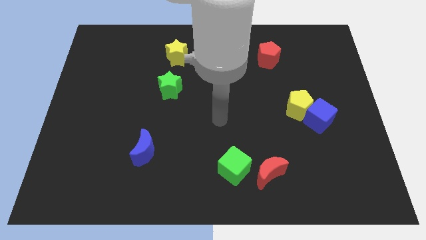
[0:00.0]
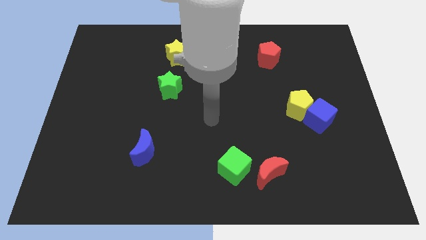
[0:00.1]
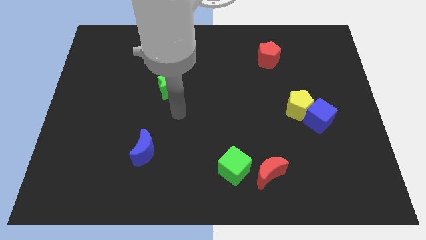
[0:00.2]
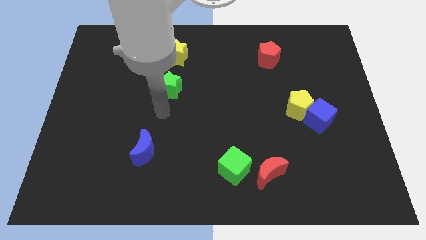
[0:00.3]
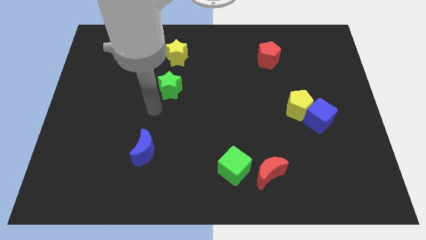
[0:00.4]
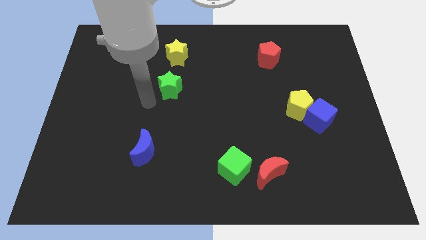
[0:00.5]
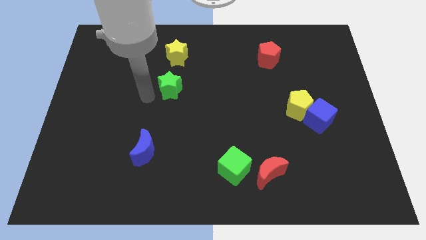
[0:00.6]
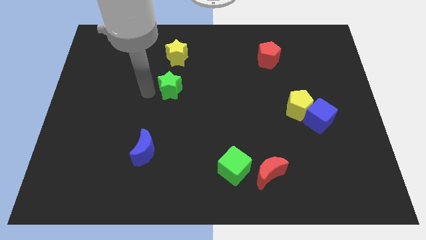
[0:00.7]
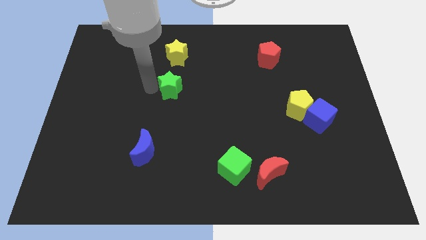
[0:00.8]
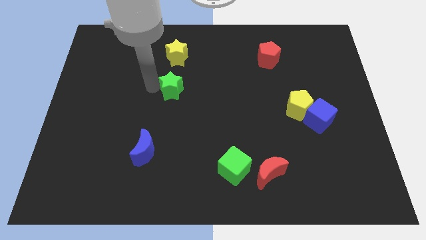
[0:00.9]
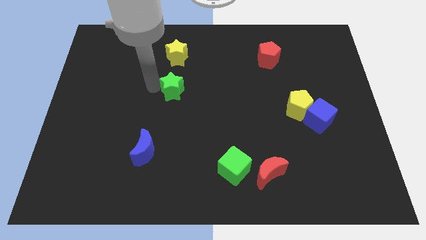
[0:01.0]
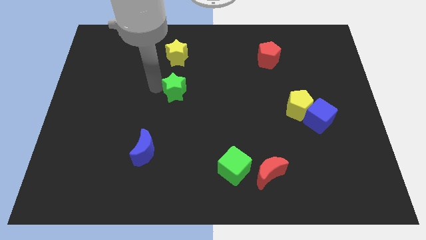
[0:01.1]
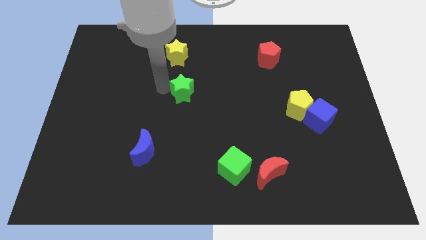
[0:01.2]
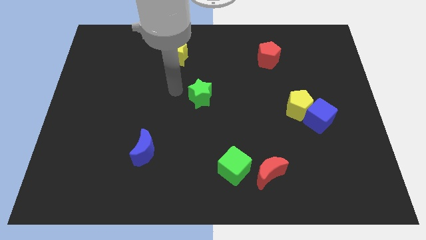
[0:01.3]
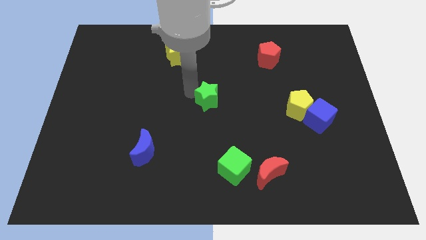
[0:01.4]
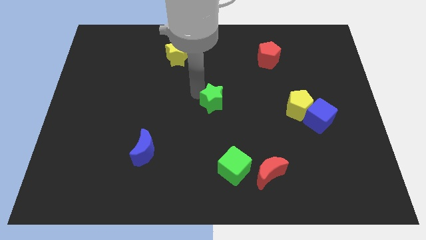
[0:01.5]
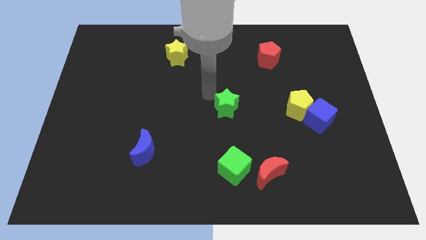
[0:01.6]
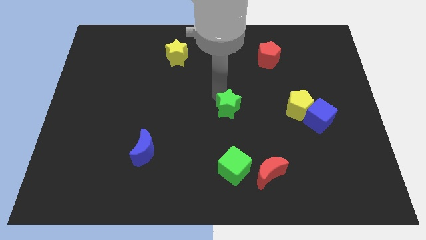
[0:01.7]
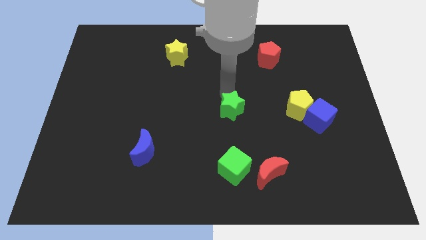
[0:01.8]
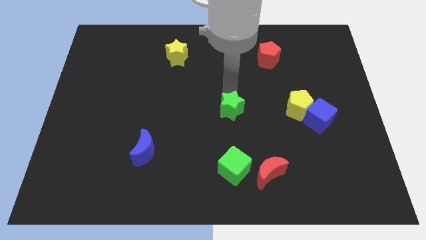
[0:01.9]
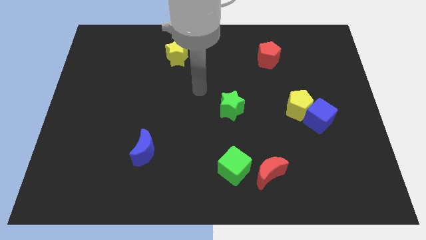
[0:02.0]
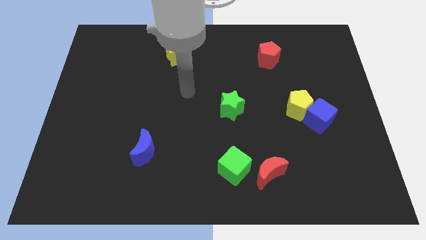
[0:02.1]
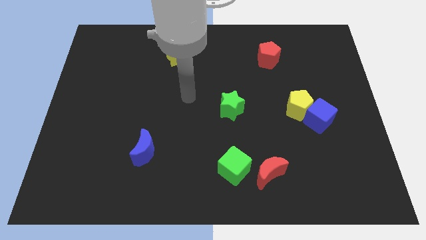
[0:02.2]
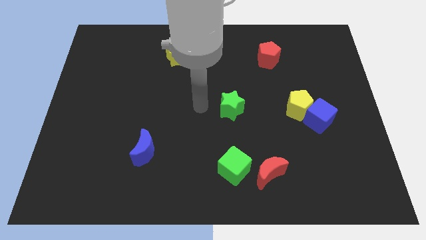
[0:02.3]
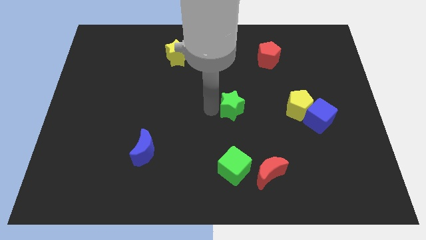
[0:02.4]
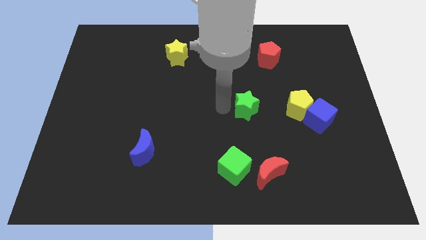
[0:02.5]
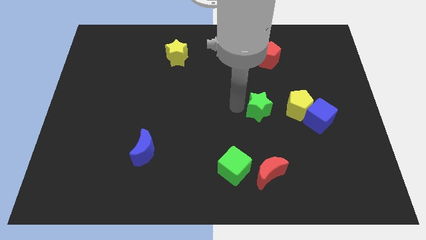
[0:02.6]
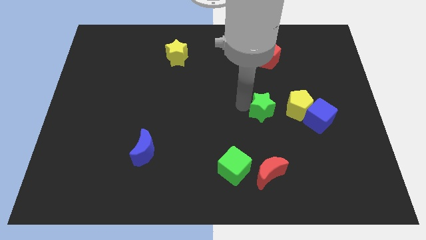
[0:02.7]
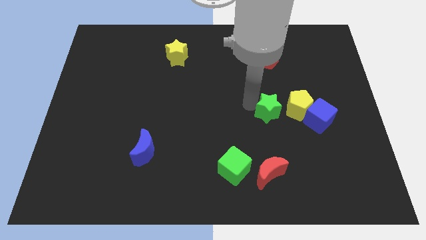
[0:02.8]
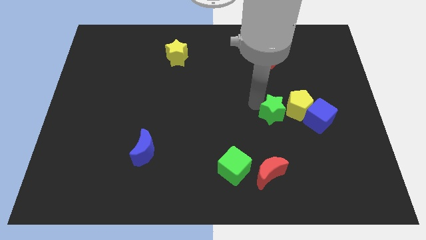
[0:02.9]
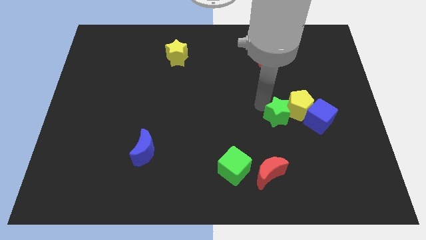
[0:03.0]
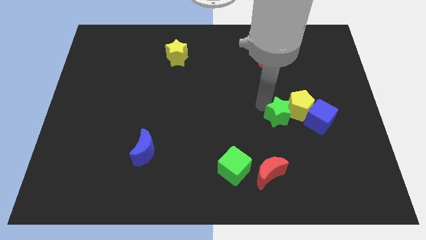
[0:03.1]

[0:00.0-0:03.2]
push the green star next to the yellow pentagon

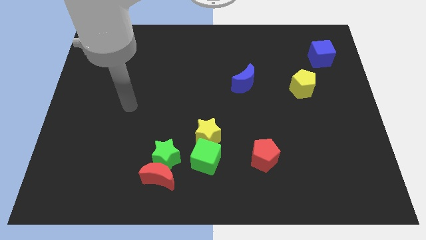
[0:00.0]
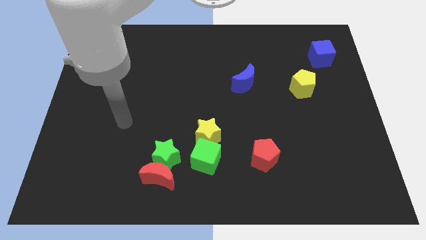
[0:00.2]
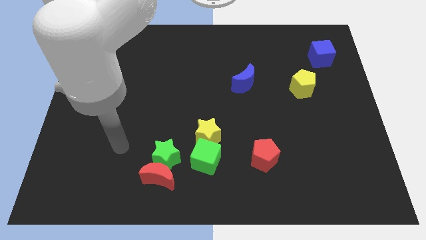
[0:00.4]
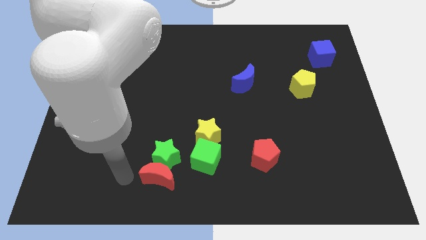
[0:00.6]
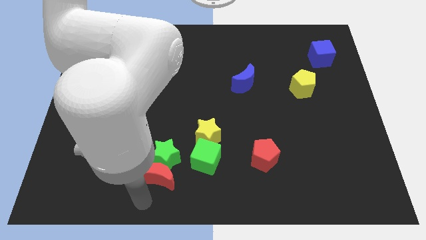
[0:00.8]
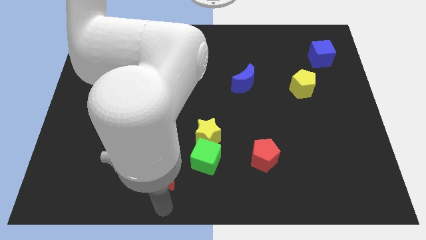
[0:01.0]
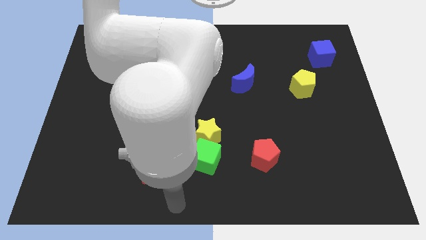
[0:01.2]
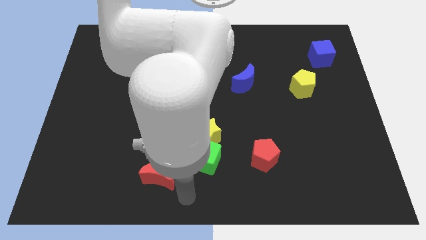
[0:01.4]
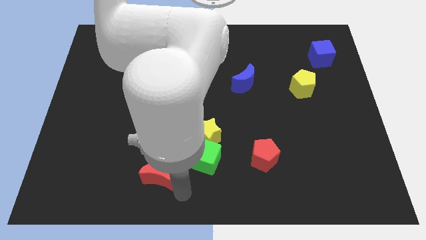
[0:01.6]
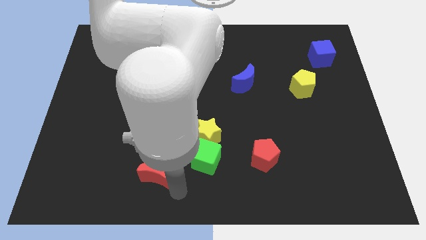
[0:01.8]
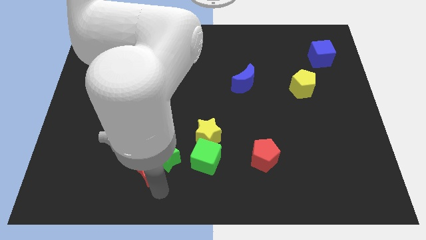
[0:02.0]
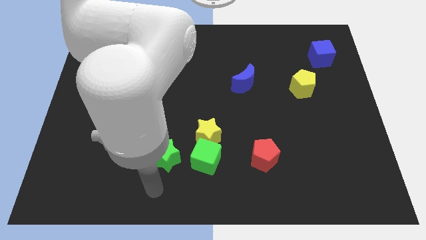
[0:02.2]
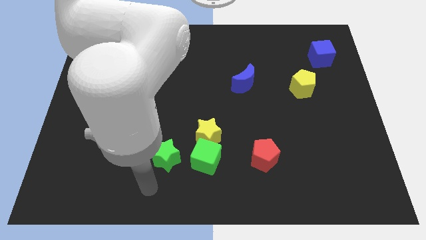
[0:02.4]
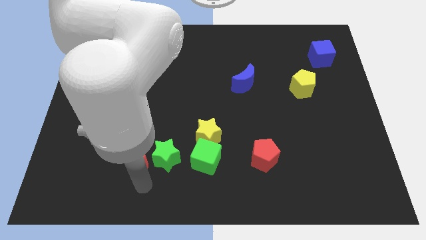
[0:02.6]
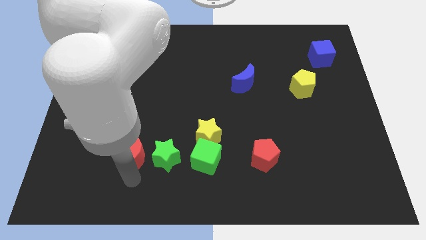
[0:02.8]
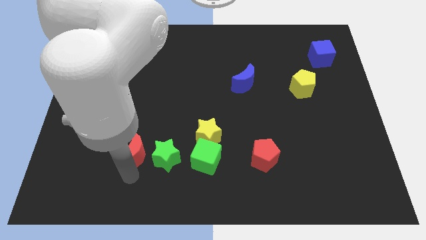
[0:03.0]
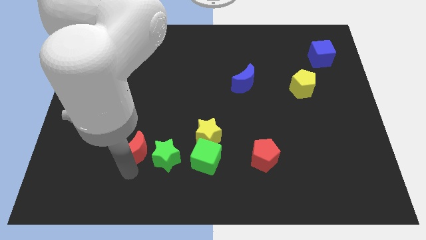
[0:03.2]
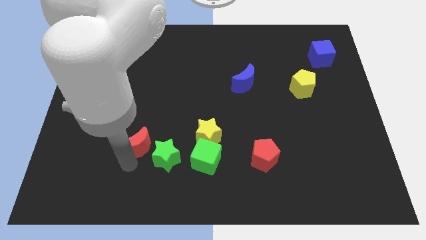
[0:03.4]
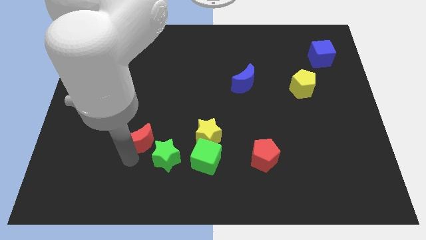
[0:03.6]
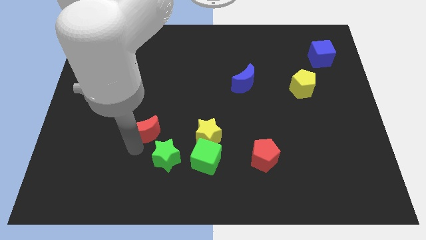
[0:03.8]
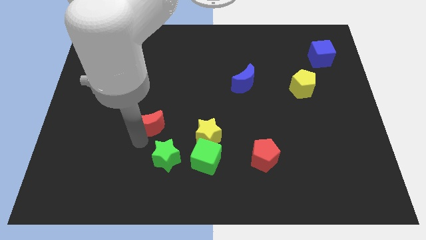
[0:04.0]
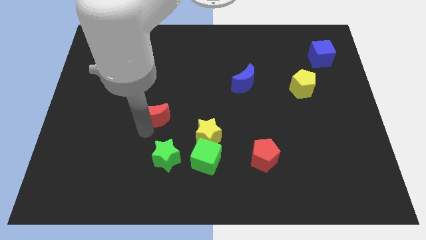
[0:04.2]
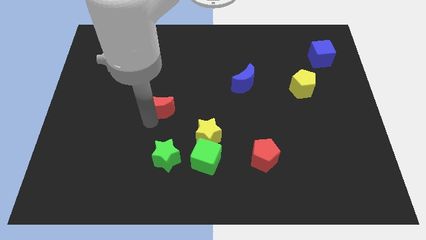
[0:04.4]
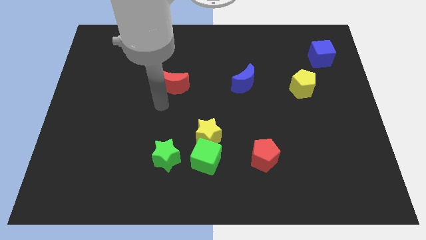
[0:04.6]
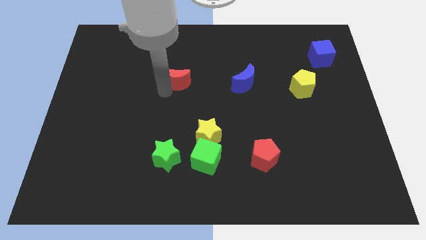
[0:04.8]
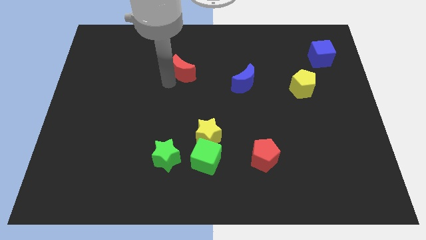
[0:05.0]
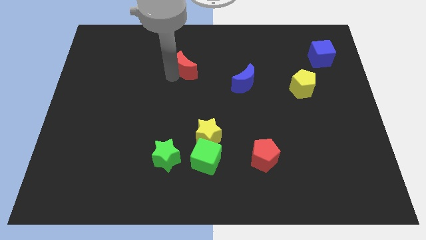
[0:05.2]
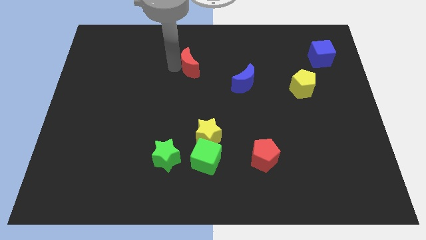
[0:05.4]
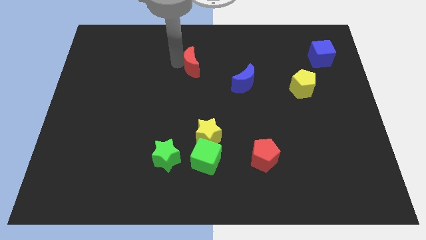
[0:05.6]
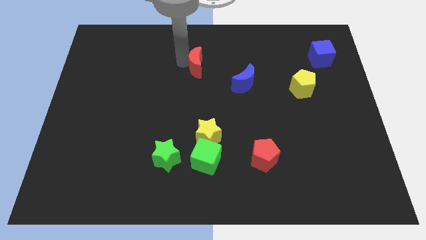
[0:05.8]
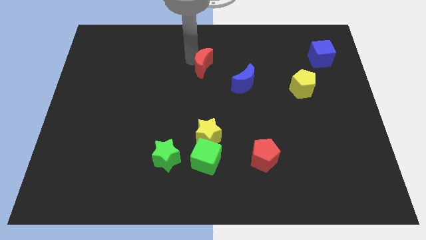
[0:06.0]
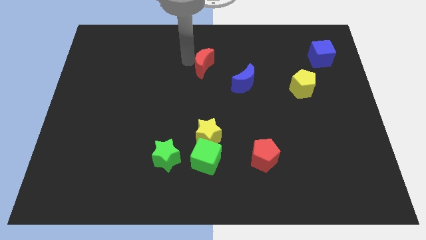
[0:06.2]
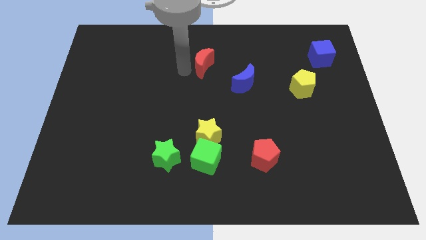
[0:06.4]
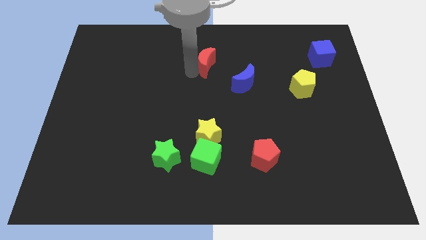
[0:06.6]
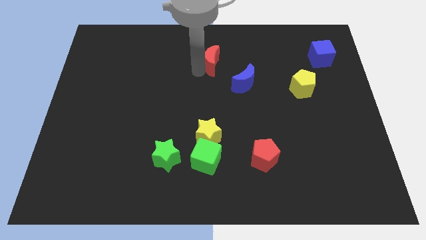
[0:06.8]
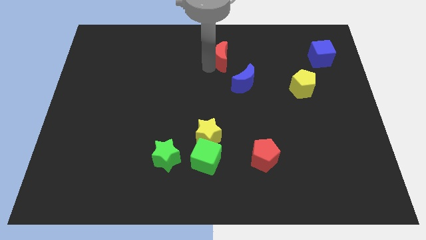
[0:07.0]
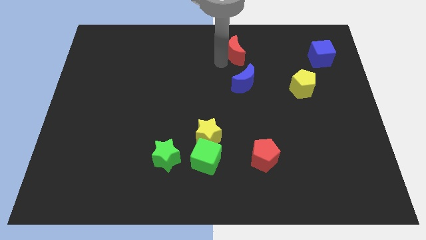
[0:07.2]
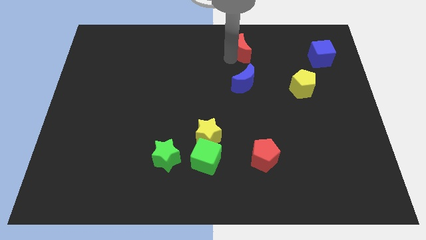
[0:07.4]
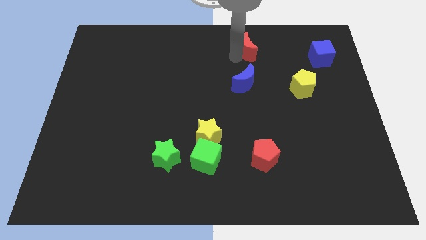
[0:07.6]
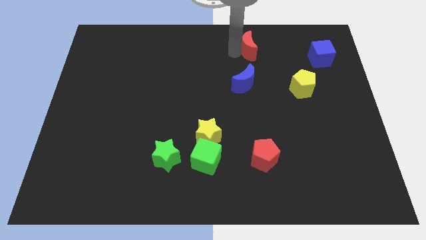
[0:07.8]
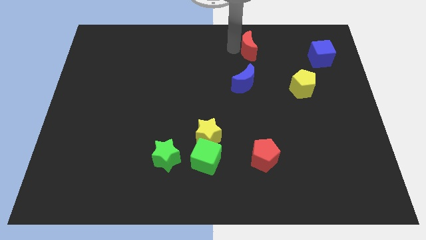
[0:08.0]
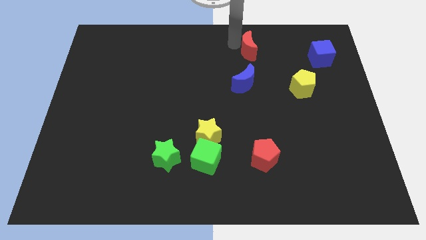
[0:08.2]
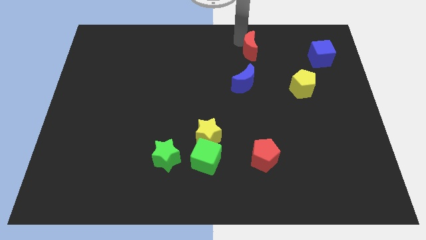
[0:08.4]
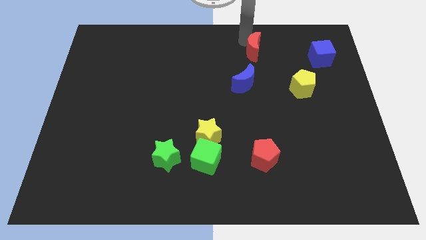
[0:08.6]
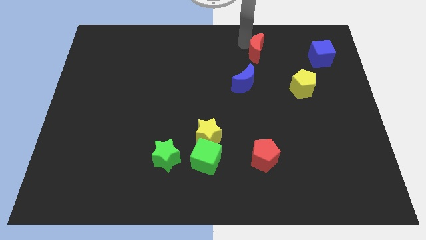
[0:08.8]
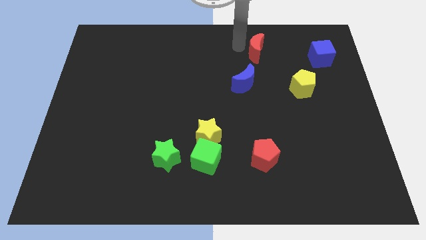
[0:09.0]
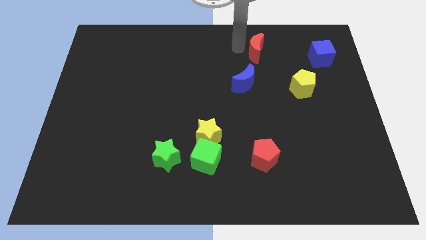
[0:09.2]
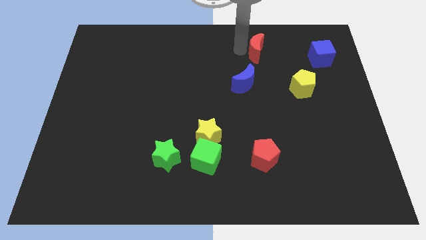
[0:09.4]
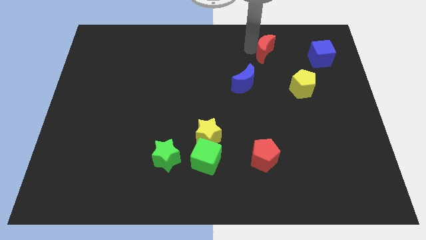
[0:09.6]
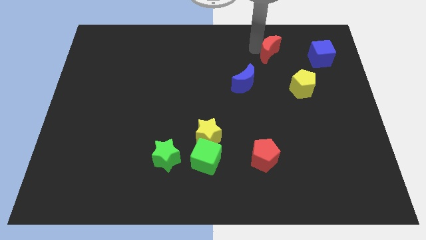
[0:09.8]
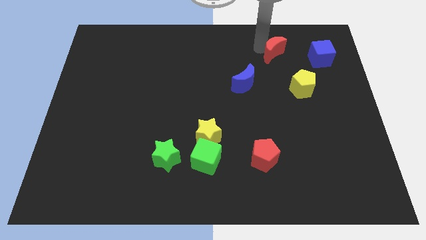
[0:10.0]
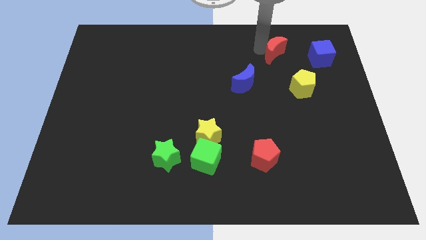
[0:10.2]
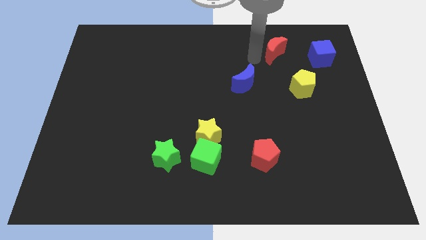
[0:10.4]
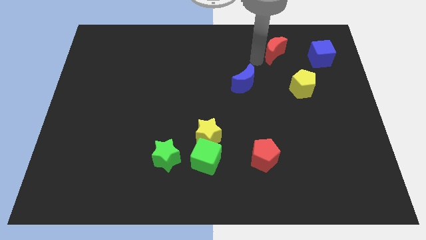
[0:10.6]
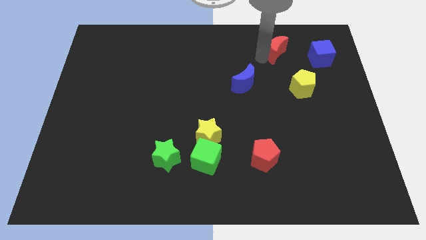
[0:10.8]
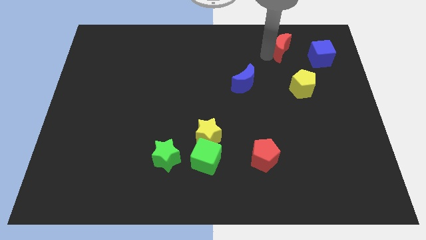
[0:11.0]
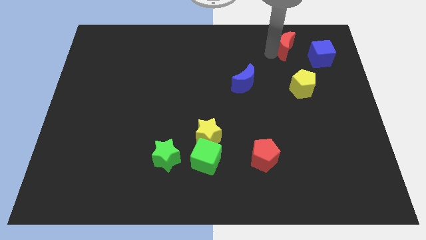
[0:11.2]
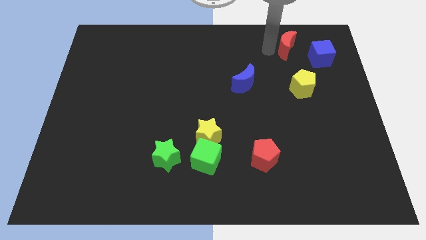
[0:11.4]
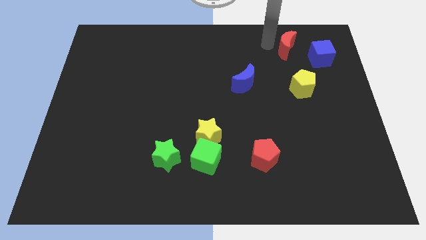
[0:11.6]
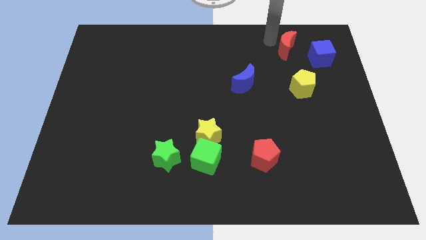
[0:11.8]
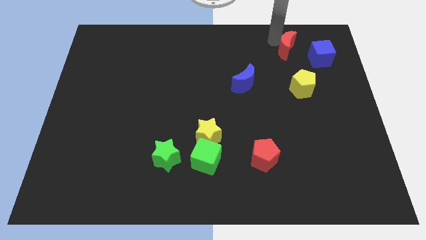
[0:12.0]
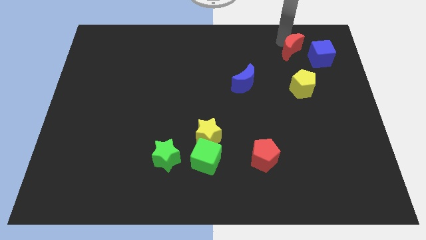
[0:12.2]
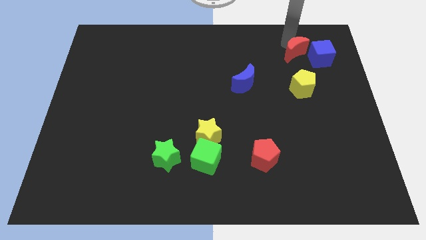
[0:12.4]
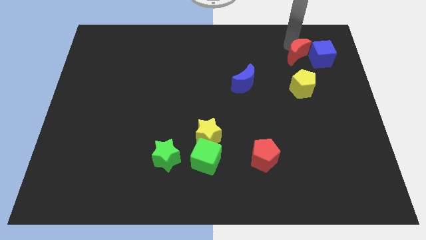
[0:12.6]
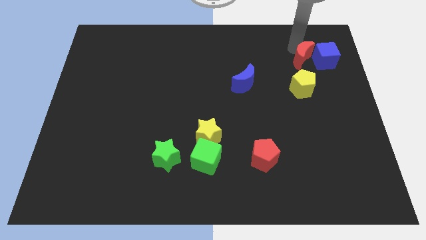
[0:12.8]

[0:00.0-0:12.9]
push the red moon towards the blue cube
